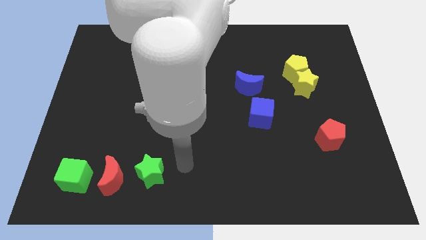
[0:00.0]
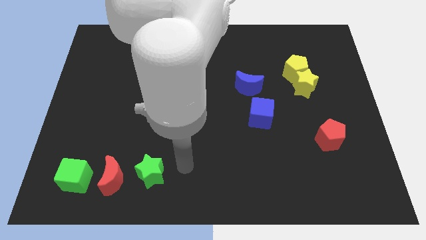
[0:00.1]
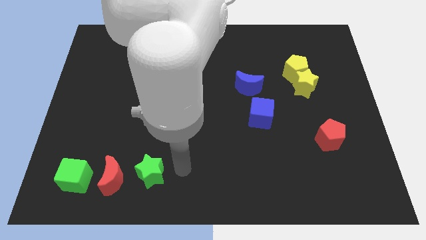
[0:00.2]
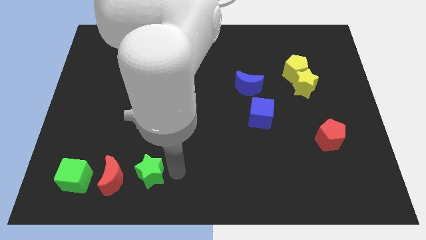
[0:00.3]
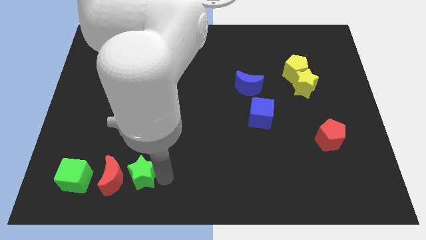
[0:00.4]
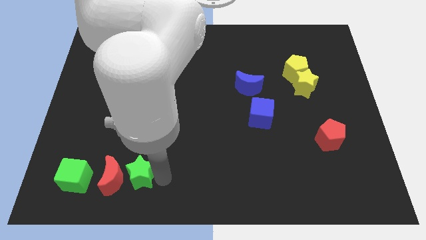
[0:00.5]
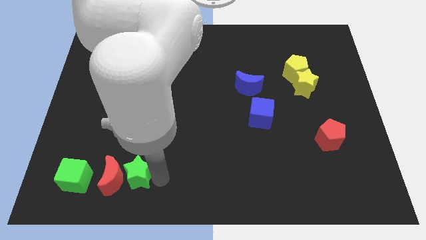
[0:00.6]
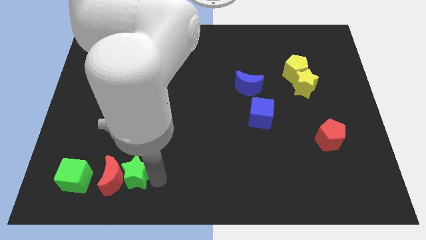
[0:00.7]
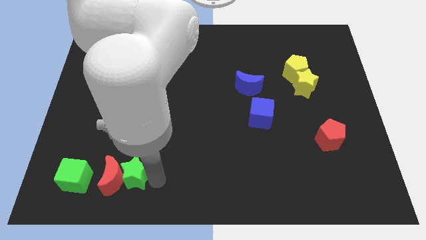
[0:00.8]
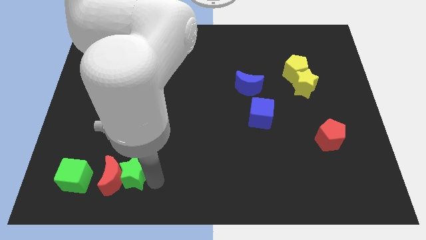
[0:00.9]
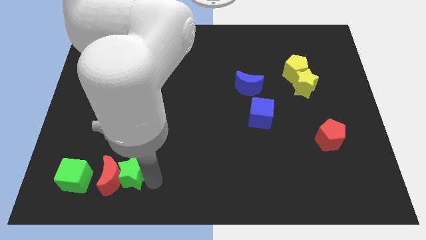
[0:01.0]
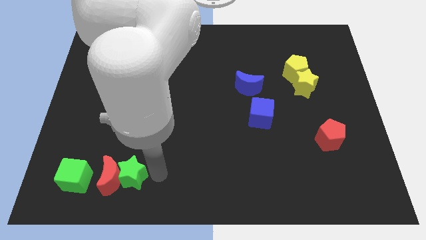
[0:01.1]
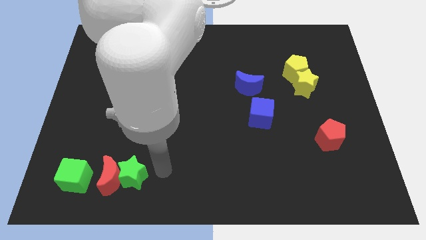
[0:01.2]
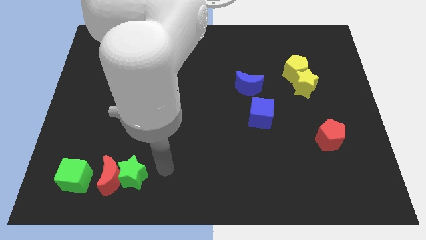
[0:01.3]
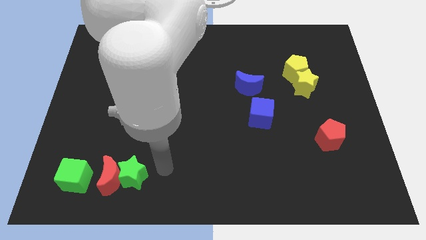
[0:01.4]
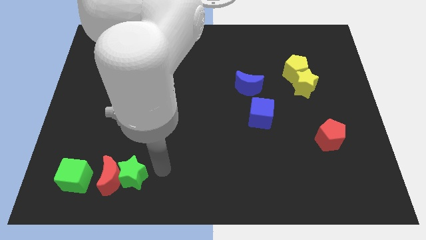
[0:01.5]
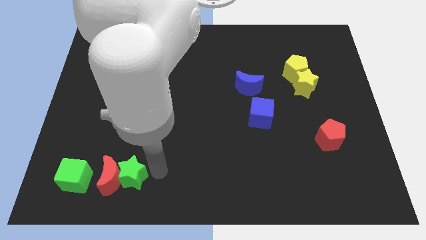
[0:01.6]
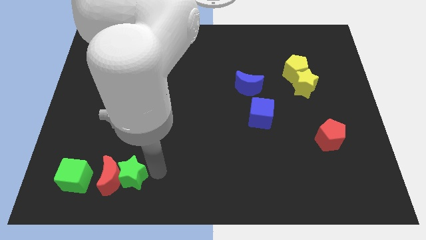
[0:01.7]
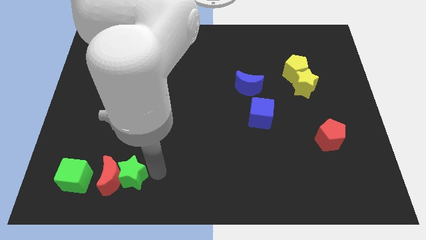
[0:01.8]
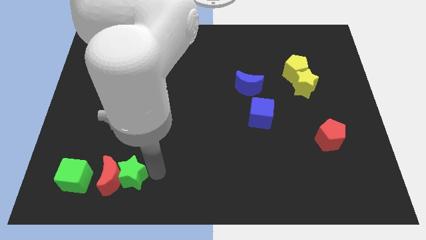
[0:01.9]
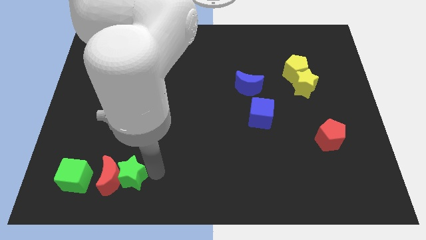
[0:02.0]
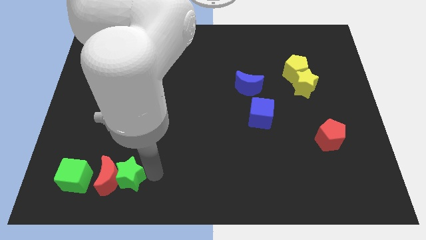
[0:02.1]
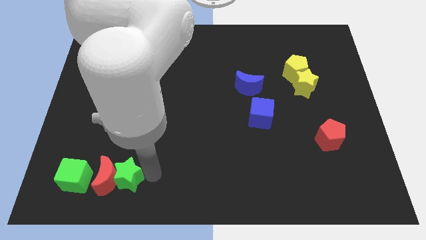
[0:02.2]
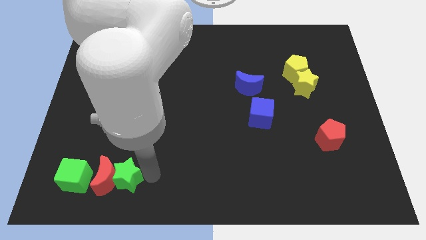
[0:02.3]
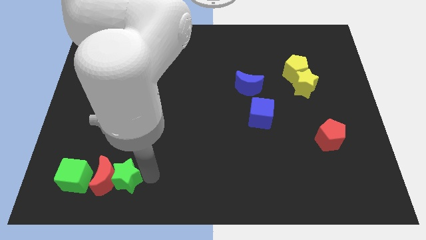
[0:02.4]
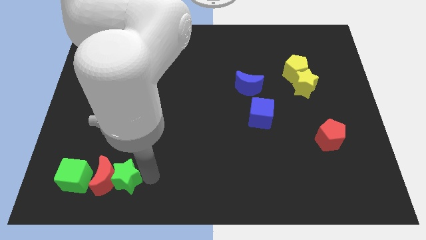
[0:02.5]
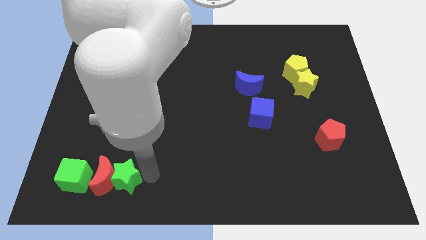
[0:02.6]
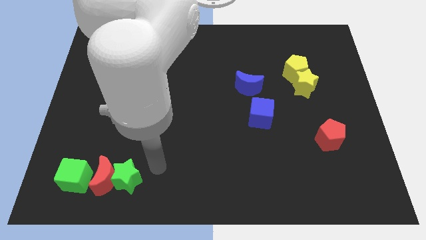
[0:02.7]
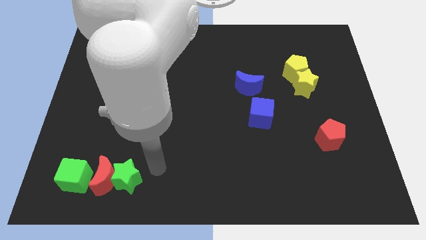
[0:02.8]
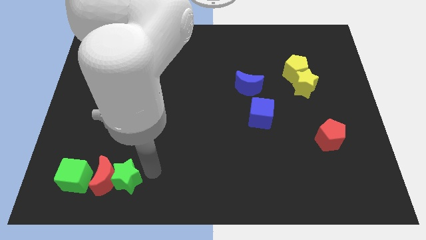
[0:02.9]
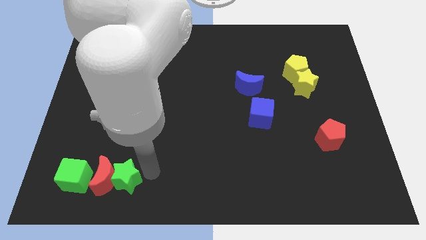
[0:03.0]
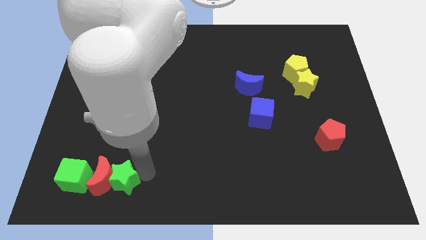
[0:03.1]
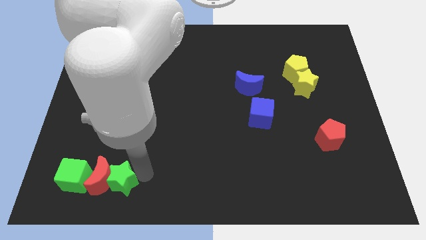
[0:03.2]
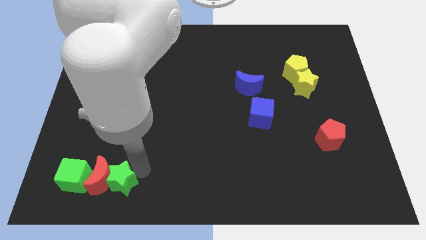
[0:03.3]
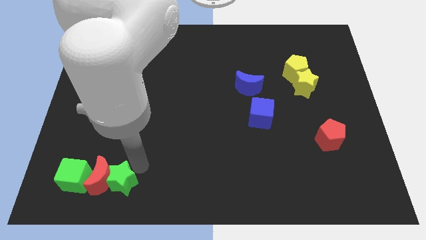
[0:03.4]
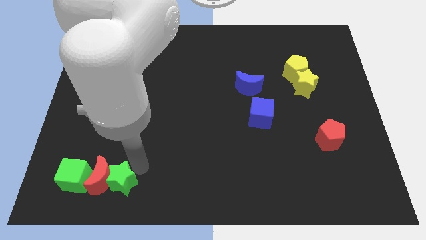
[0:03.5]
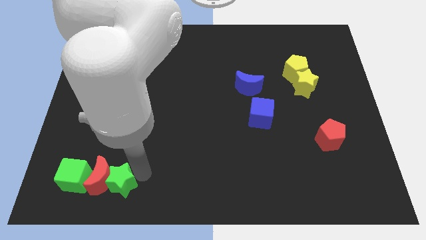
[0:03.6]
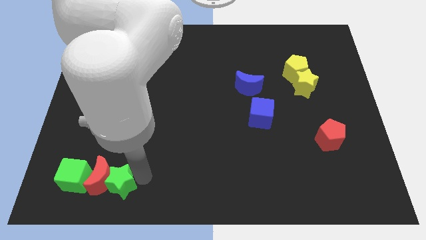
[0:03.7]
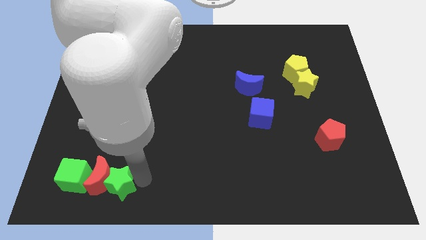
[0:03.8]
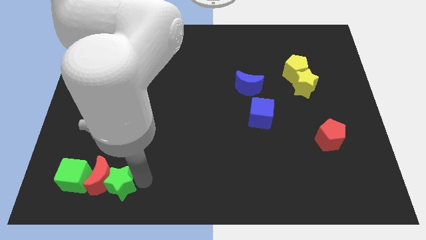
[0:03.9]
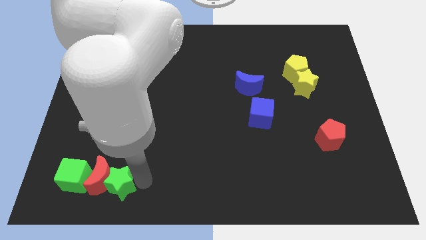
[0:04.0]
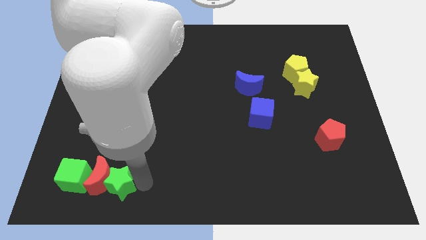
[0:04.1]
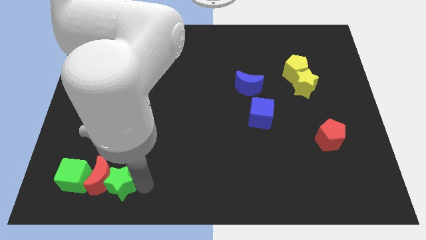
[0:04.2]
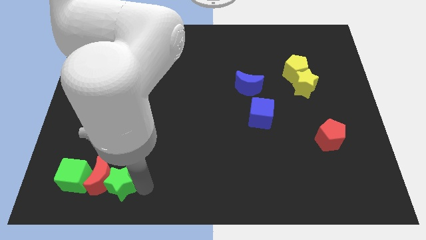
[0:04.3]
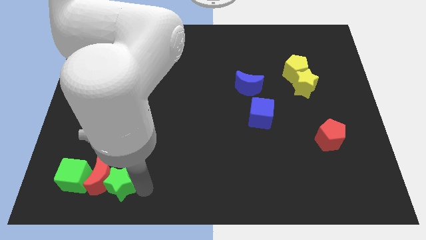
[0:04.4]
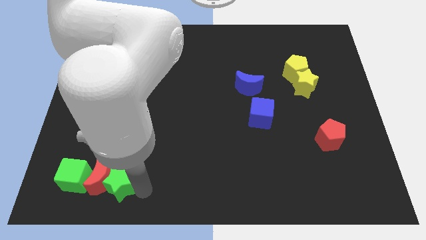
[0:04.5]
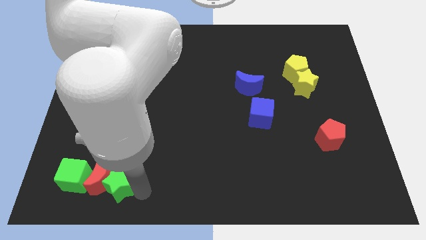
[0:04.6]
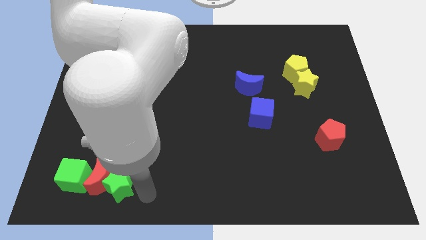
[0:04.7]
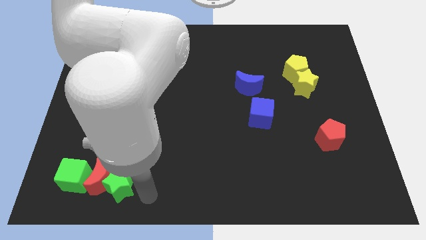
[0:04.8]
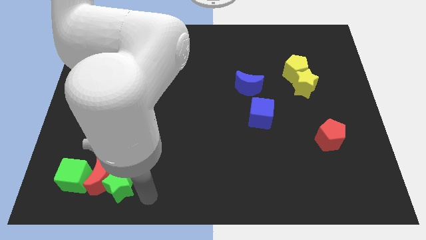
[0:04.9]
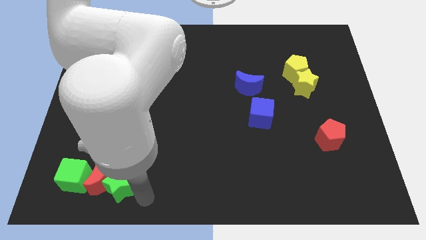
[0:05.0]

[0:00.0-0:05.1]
push green star along with red crescent into green cube

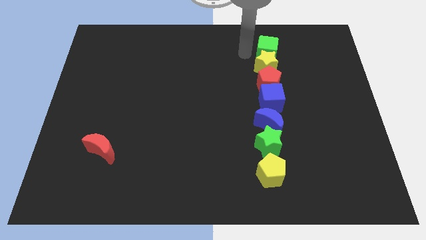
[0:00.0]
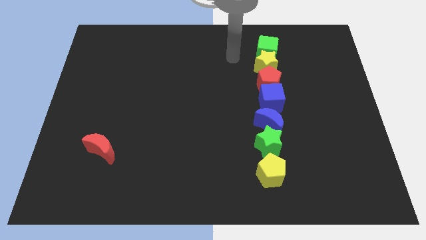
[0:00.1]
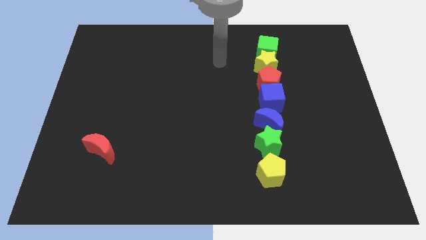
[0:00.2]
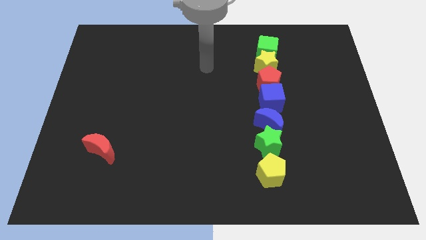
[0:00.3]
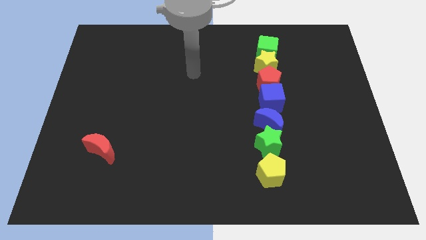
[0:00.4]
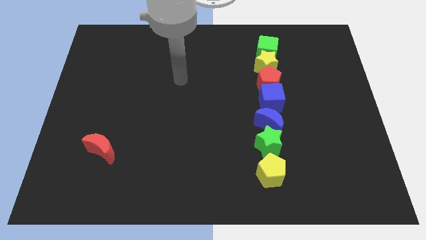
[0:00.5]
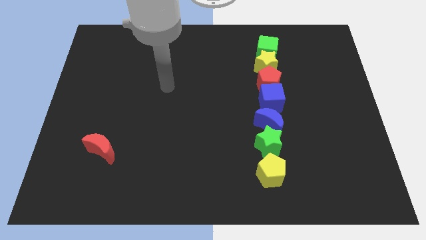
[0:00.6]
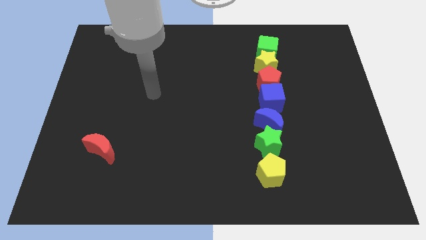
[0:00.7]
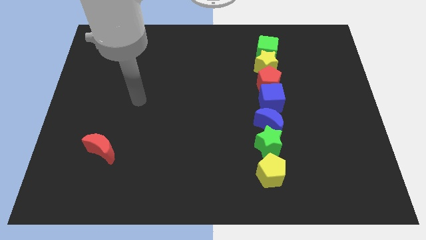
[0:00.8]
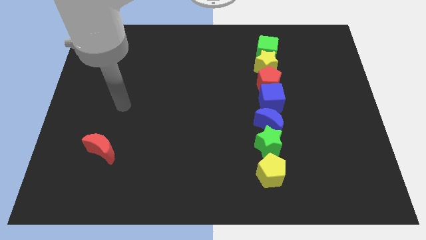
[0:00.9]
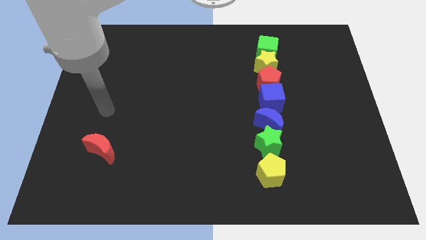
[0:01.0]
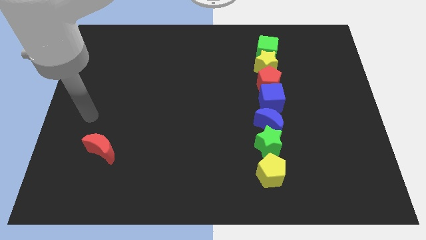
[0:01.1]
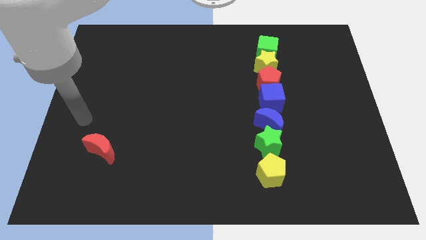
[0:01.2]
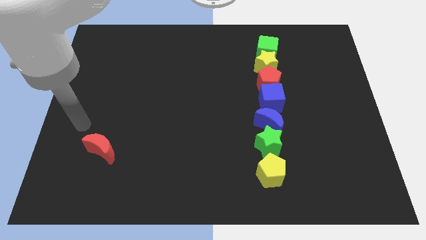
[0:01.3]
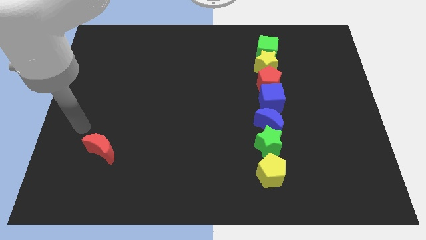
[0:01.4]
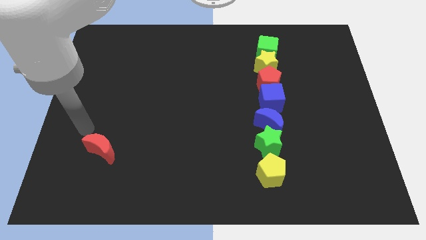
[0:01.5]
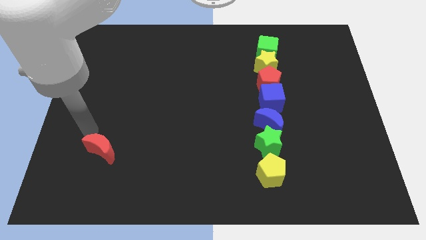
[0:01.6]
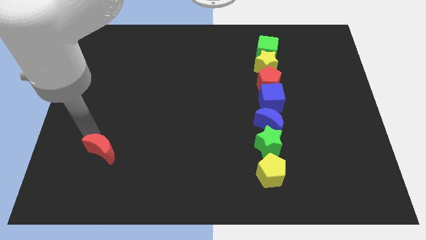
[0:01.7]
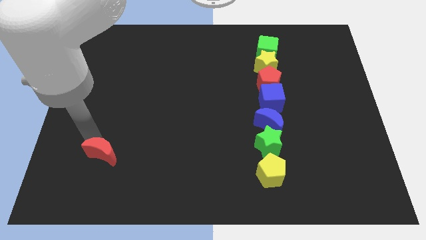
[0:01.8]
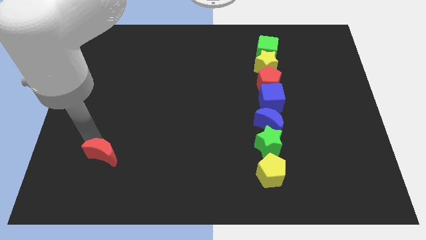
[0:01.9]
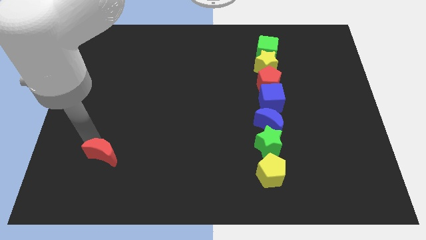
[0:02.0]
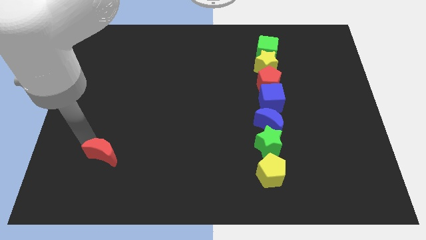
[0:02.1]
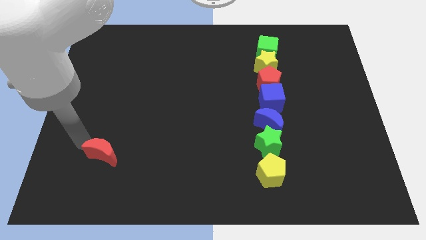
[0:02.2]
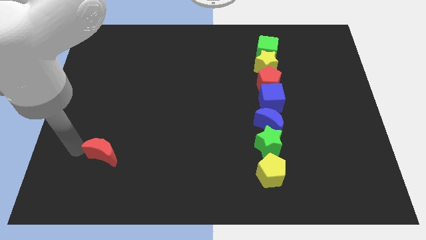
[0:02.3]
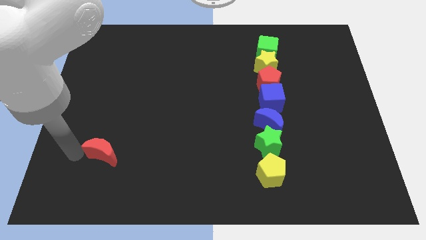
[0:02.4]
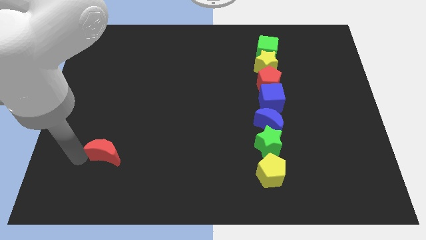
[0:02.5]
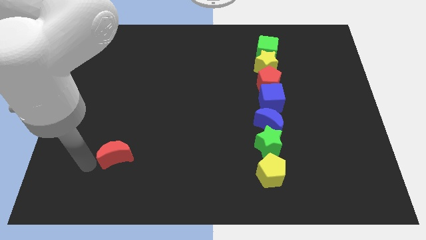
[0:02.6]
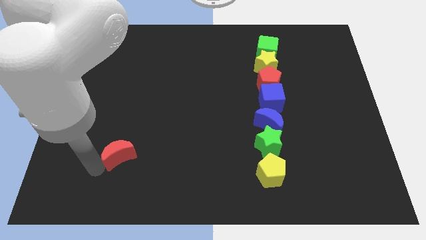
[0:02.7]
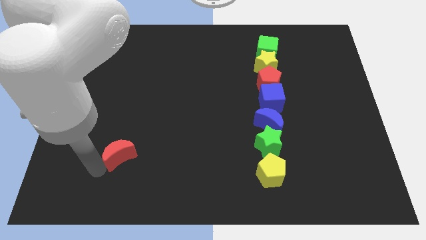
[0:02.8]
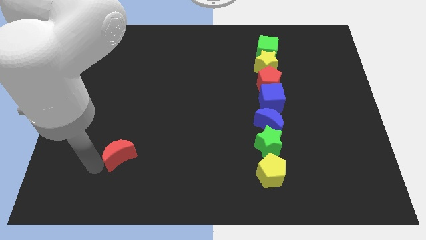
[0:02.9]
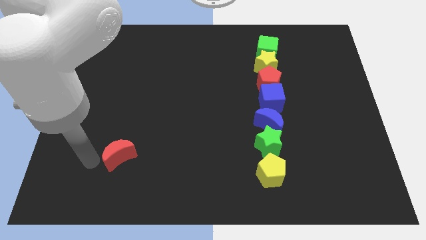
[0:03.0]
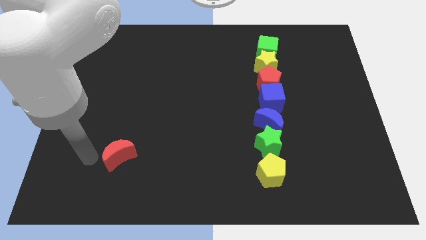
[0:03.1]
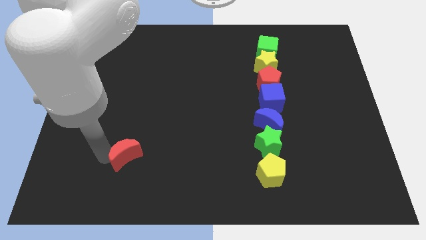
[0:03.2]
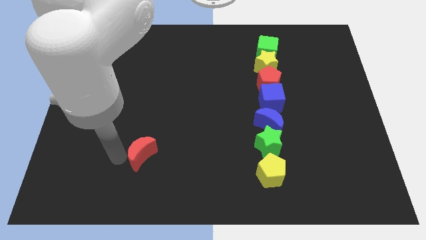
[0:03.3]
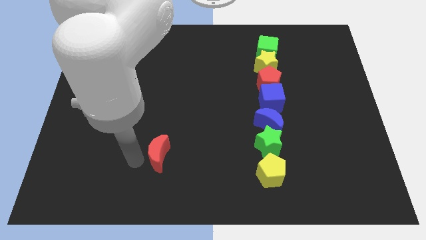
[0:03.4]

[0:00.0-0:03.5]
move the red crescent slightly to the right

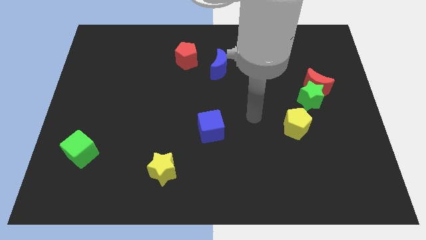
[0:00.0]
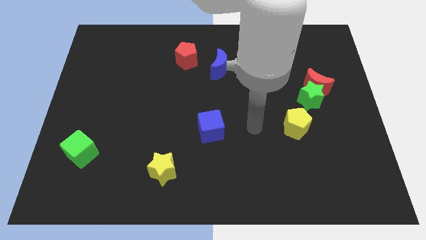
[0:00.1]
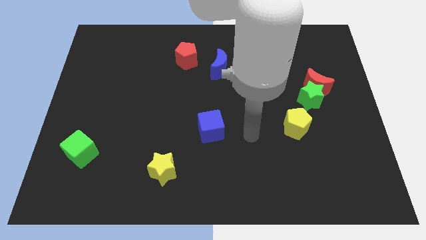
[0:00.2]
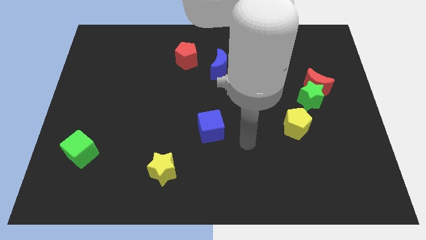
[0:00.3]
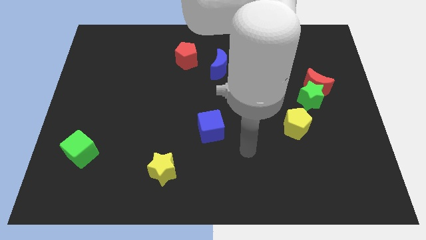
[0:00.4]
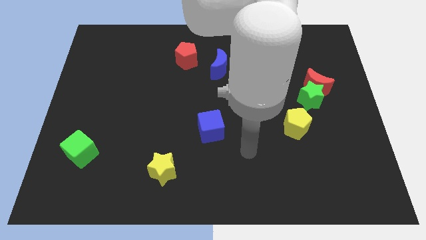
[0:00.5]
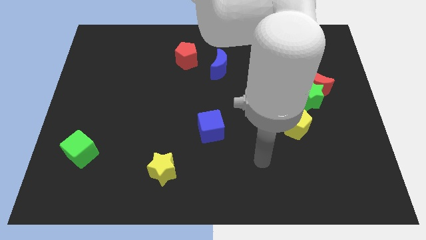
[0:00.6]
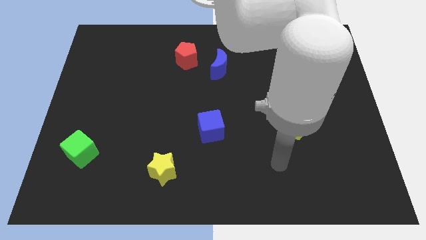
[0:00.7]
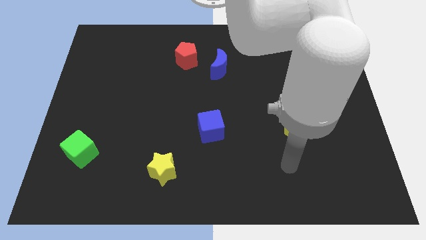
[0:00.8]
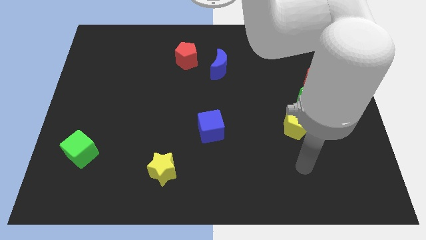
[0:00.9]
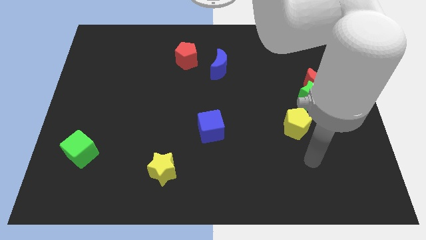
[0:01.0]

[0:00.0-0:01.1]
slide your arm below yellow pentagon
